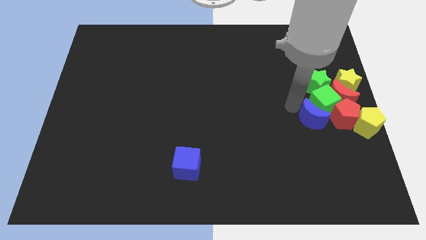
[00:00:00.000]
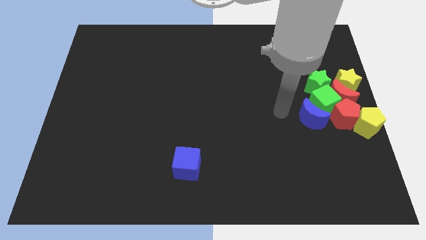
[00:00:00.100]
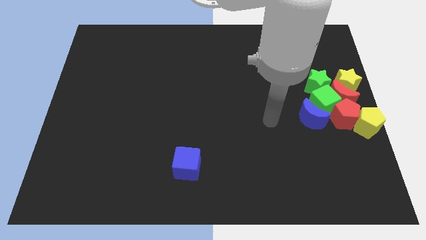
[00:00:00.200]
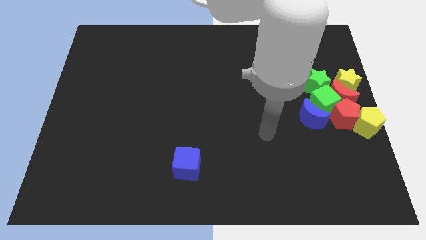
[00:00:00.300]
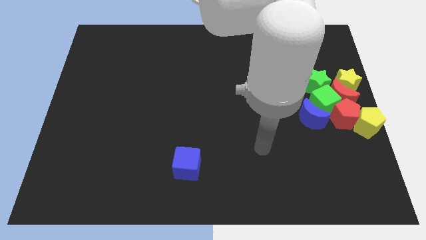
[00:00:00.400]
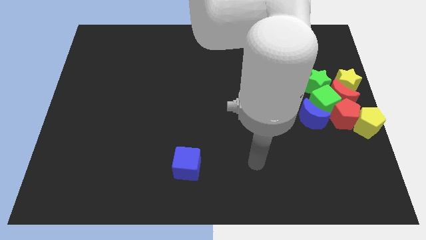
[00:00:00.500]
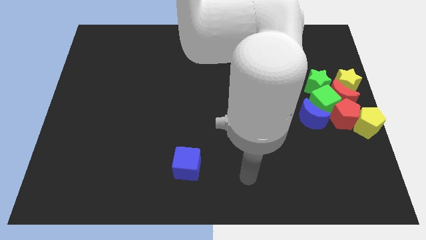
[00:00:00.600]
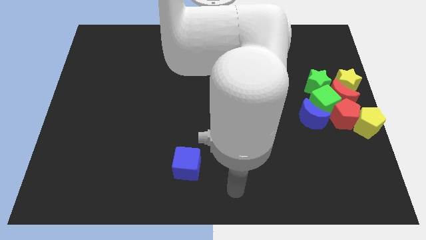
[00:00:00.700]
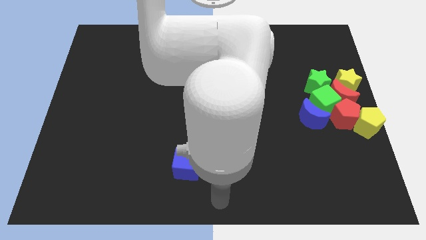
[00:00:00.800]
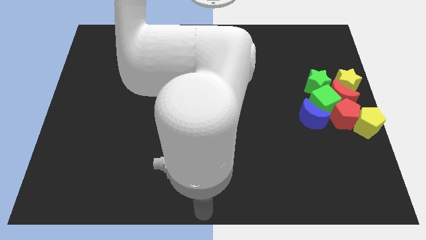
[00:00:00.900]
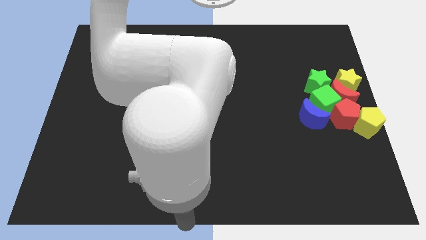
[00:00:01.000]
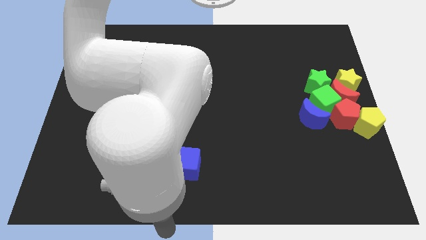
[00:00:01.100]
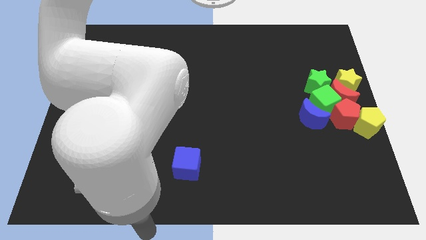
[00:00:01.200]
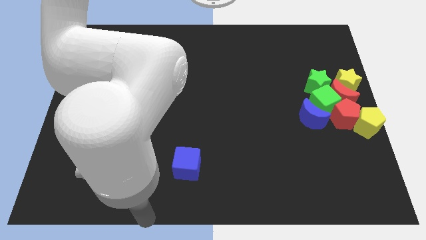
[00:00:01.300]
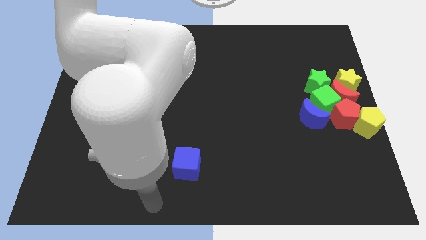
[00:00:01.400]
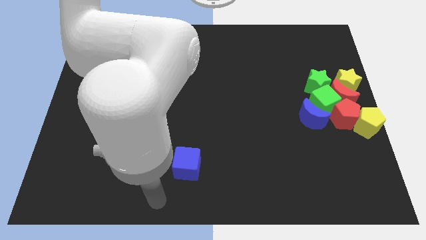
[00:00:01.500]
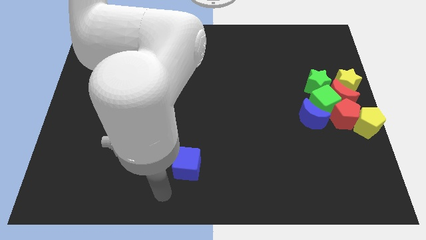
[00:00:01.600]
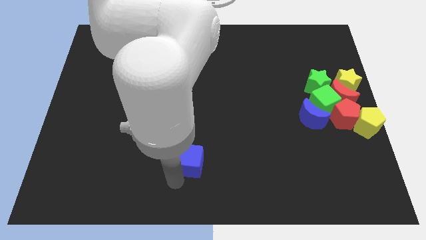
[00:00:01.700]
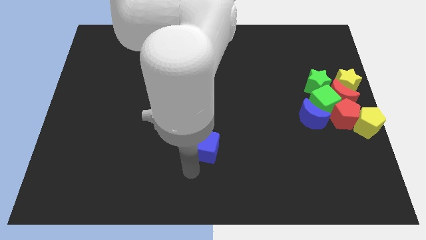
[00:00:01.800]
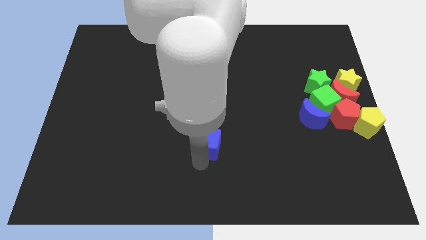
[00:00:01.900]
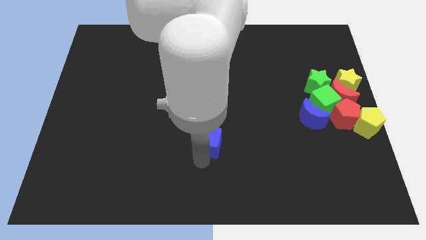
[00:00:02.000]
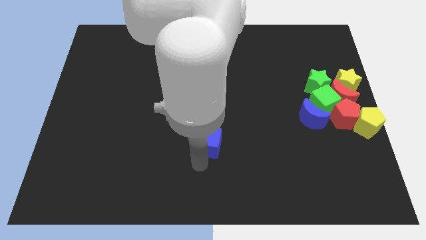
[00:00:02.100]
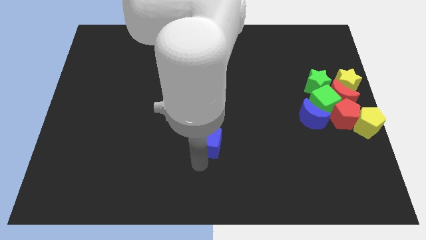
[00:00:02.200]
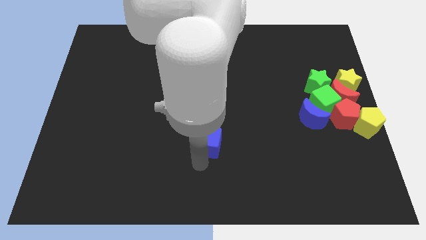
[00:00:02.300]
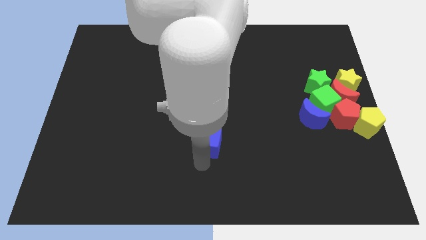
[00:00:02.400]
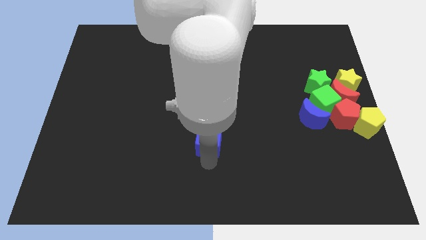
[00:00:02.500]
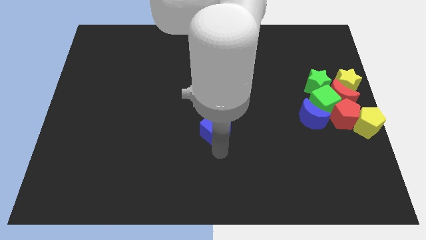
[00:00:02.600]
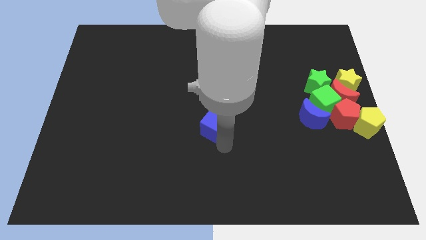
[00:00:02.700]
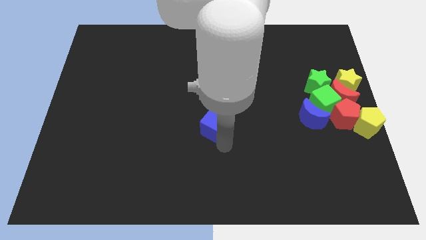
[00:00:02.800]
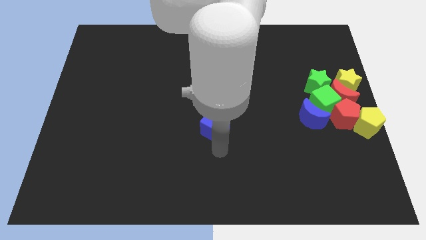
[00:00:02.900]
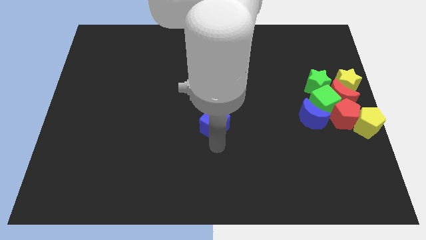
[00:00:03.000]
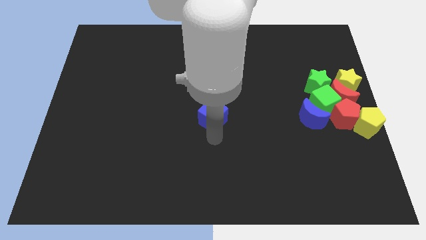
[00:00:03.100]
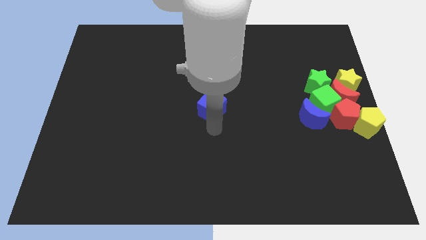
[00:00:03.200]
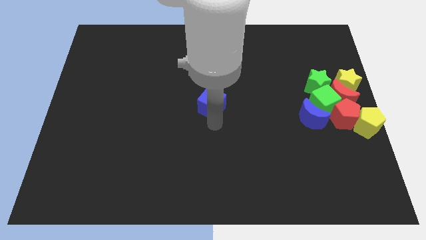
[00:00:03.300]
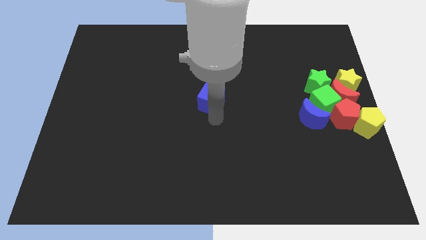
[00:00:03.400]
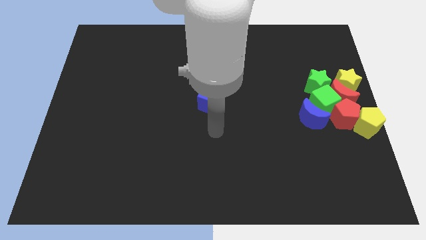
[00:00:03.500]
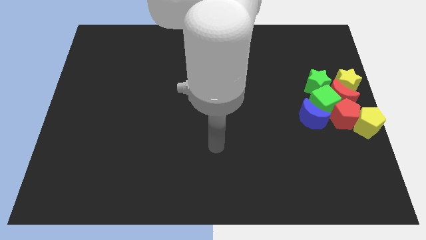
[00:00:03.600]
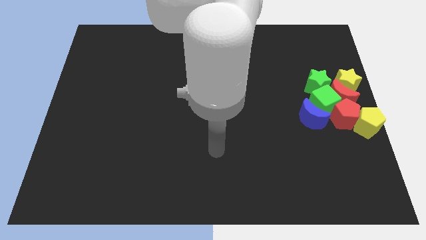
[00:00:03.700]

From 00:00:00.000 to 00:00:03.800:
put blue cube at the center of the board

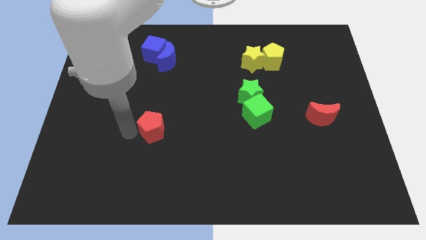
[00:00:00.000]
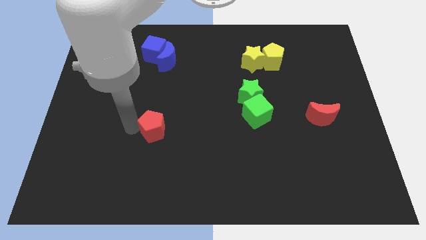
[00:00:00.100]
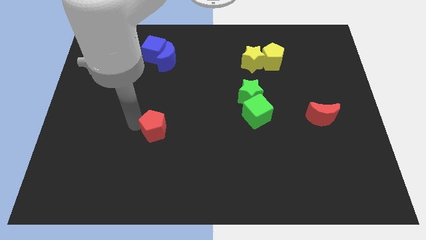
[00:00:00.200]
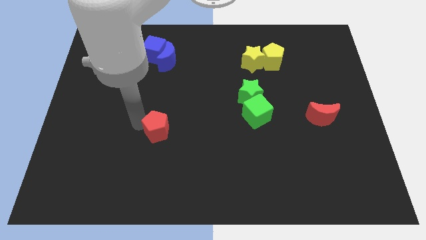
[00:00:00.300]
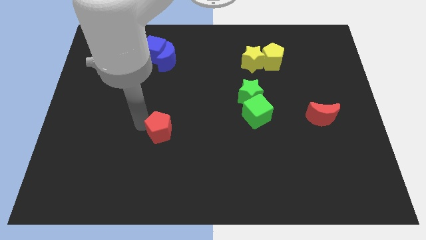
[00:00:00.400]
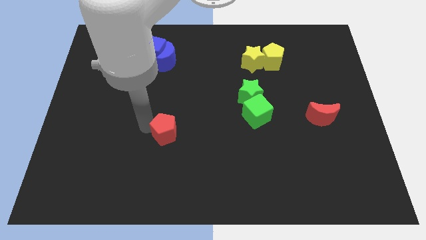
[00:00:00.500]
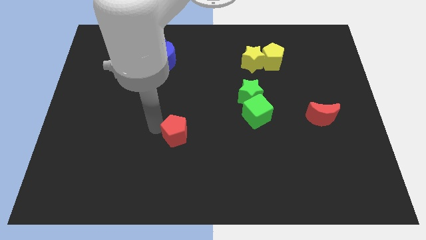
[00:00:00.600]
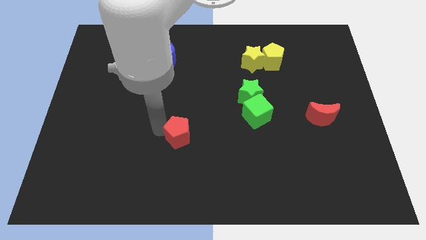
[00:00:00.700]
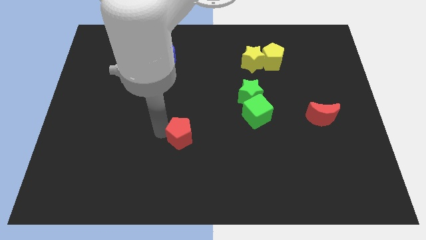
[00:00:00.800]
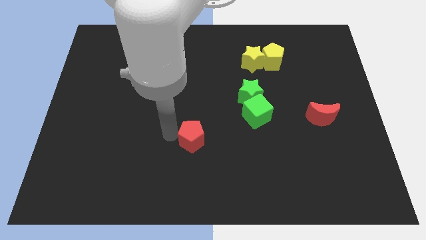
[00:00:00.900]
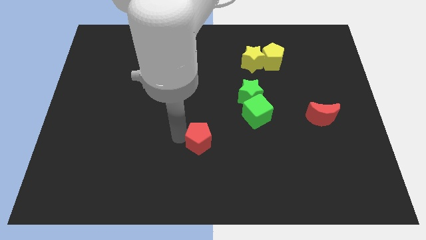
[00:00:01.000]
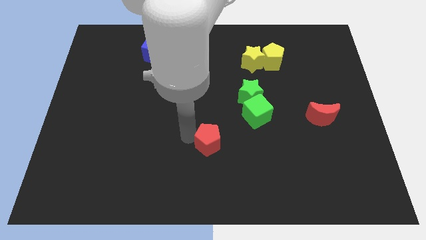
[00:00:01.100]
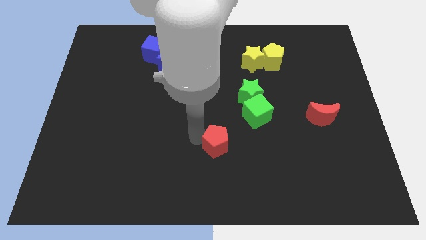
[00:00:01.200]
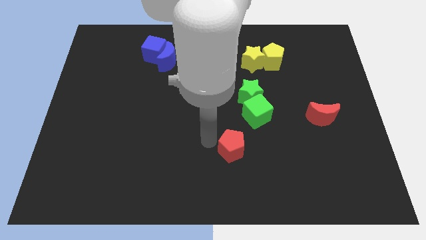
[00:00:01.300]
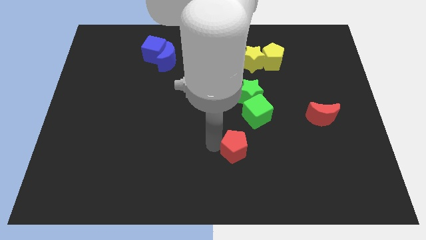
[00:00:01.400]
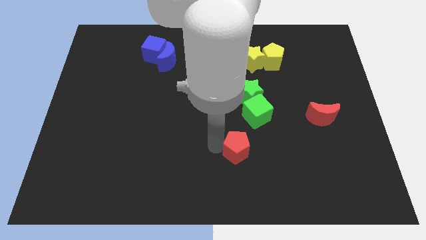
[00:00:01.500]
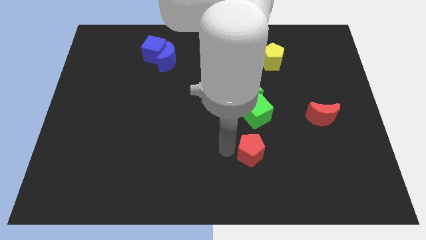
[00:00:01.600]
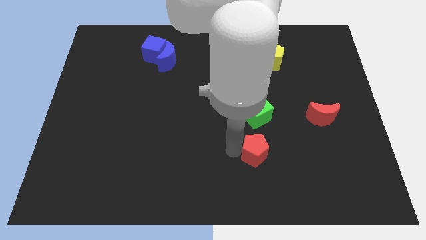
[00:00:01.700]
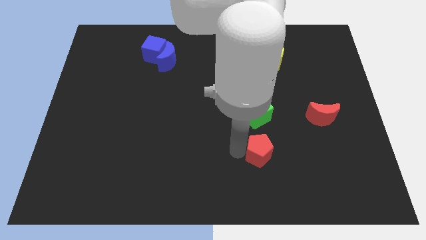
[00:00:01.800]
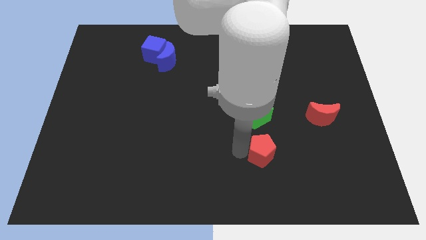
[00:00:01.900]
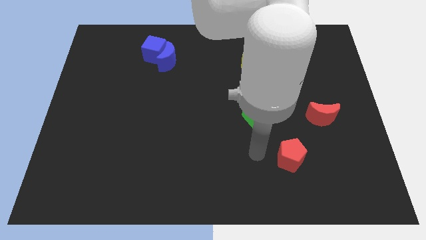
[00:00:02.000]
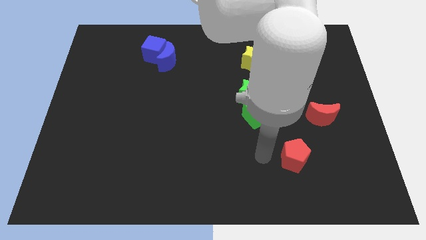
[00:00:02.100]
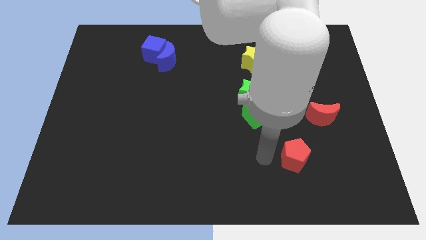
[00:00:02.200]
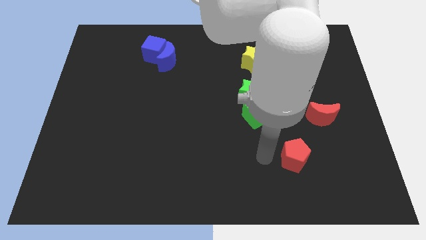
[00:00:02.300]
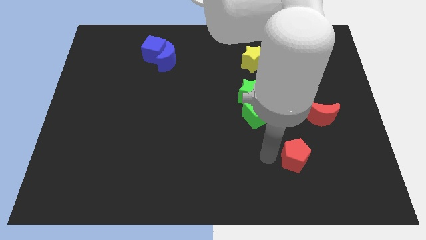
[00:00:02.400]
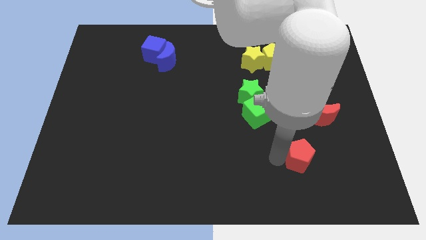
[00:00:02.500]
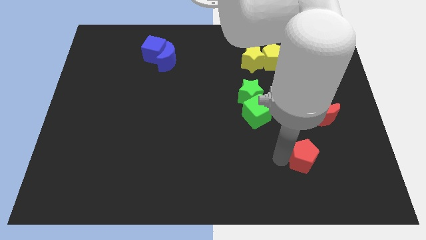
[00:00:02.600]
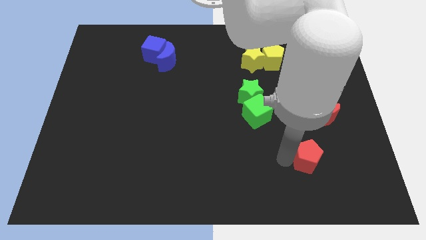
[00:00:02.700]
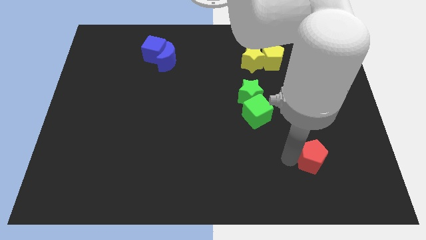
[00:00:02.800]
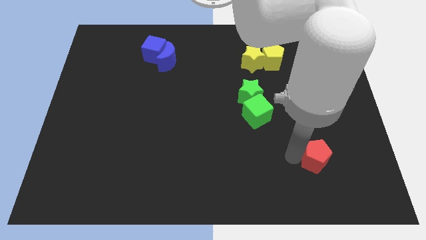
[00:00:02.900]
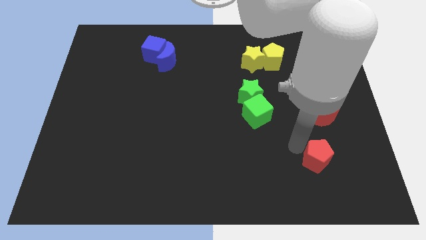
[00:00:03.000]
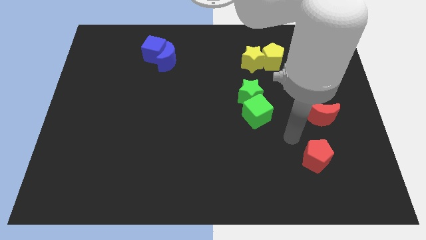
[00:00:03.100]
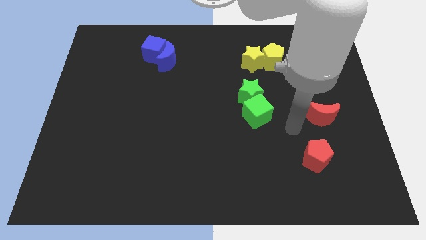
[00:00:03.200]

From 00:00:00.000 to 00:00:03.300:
push the red pentagon parallel to the bottom of the red moon

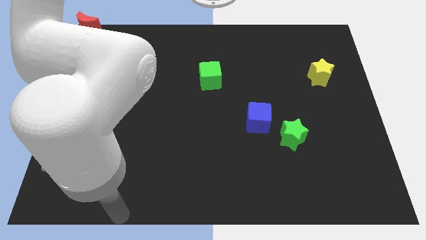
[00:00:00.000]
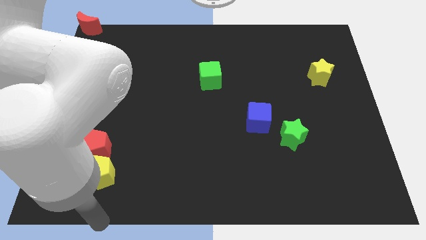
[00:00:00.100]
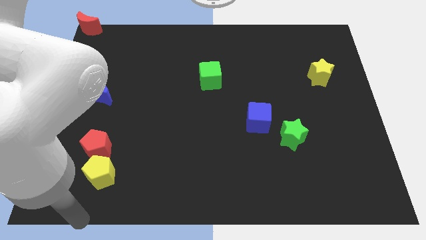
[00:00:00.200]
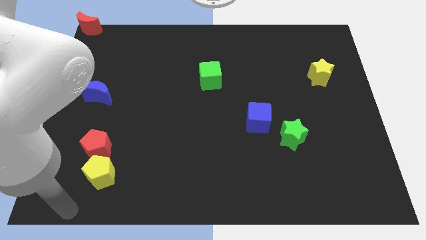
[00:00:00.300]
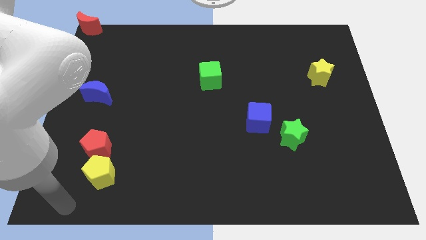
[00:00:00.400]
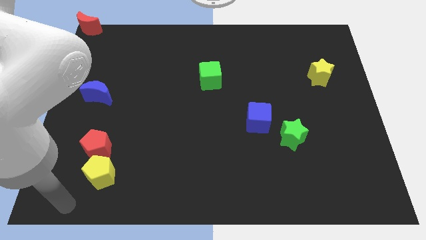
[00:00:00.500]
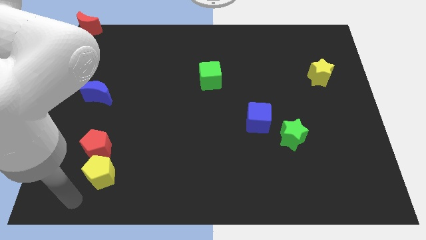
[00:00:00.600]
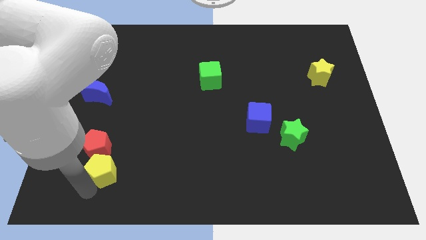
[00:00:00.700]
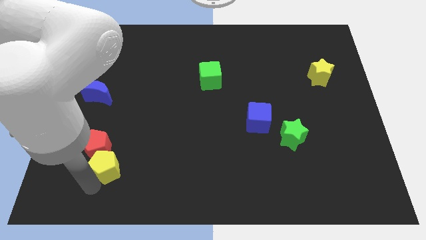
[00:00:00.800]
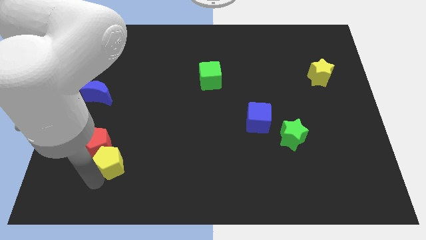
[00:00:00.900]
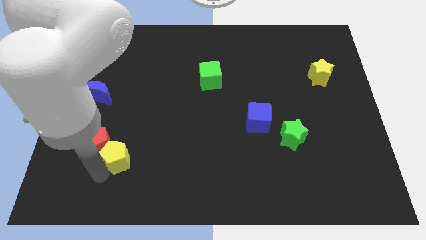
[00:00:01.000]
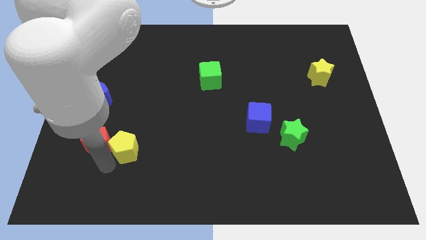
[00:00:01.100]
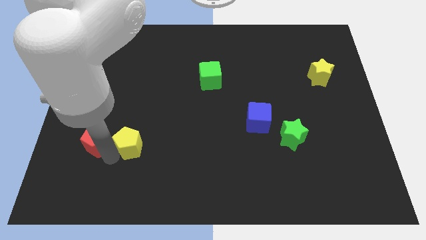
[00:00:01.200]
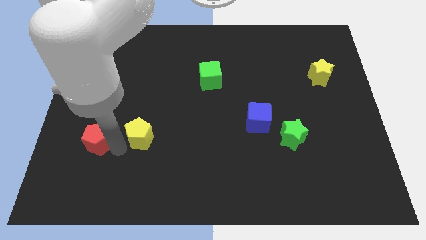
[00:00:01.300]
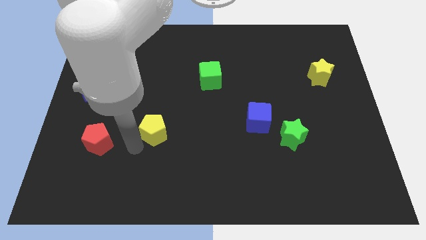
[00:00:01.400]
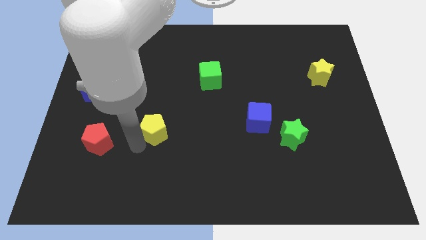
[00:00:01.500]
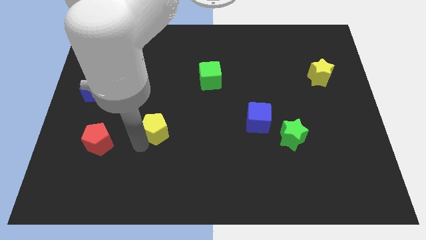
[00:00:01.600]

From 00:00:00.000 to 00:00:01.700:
separate the yellow pentagon from the red pentagon
